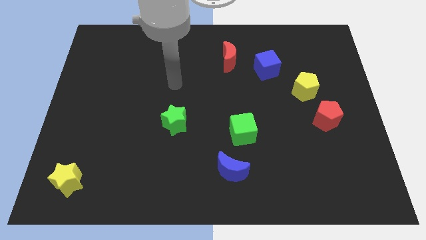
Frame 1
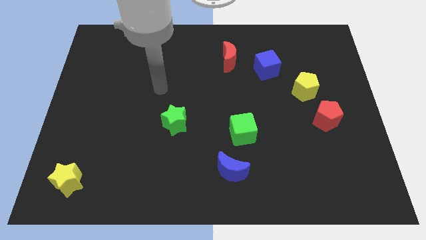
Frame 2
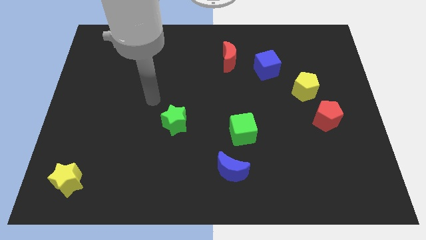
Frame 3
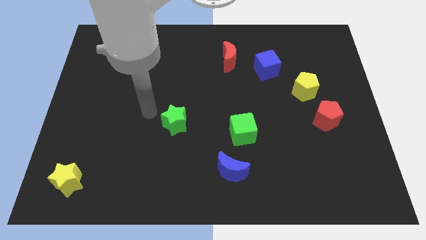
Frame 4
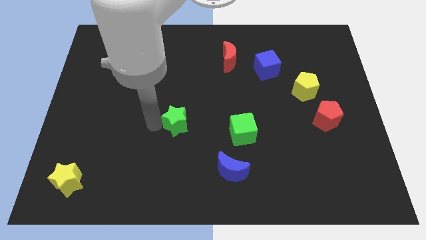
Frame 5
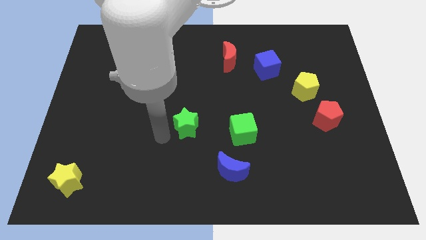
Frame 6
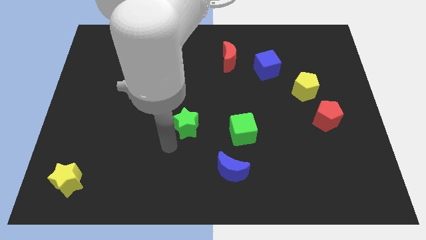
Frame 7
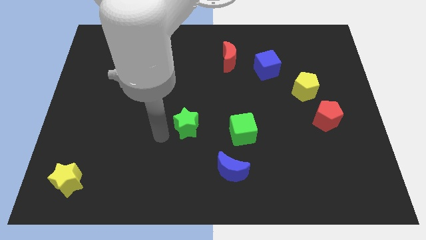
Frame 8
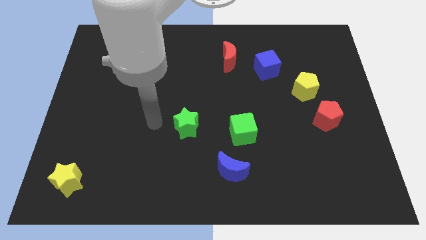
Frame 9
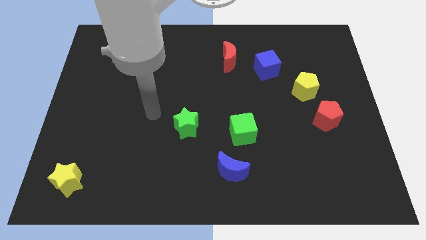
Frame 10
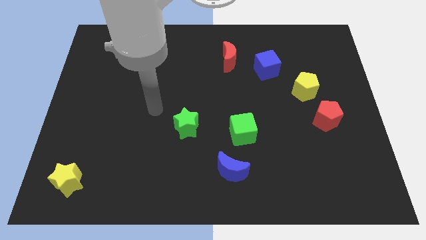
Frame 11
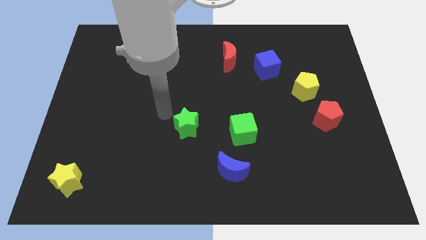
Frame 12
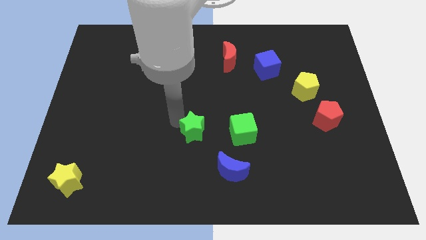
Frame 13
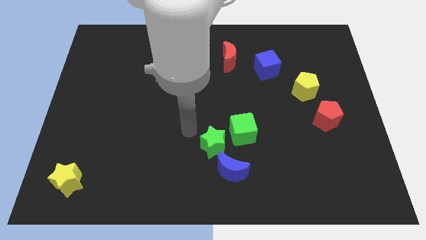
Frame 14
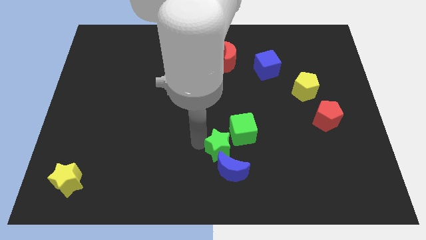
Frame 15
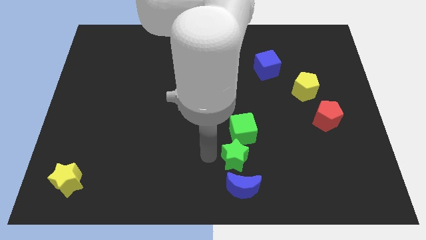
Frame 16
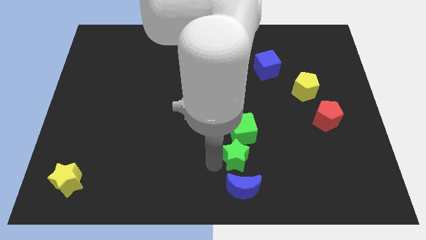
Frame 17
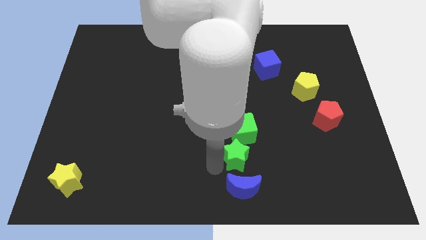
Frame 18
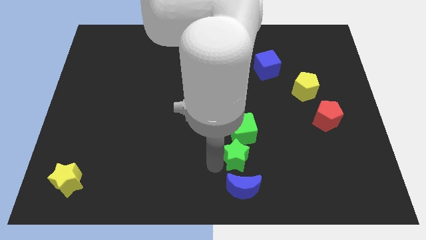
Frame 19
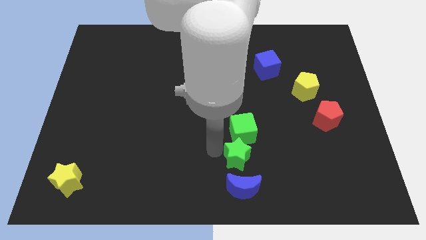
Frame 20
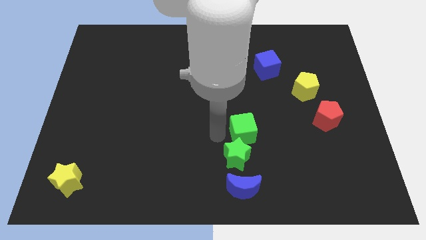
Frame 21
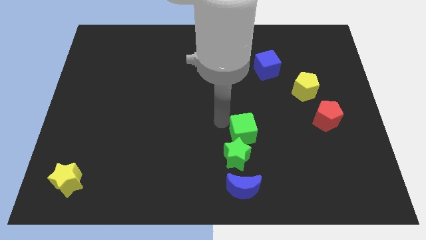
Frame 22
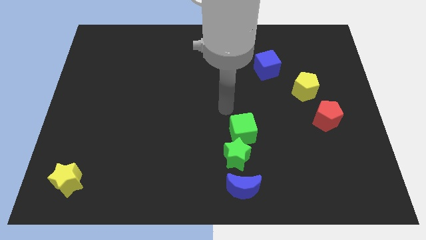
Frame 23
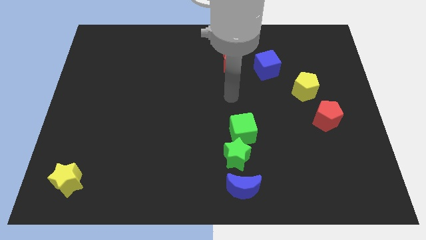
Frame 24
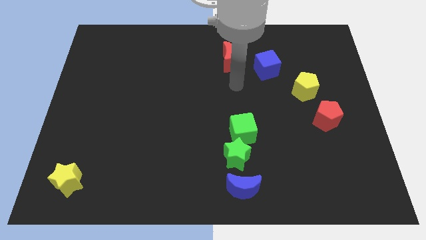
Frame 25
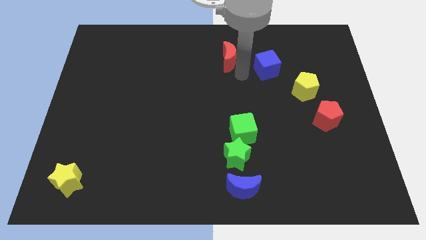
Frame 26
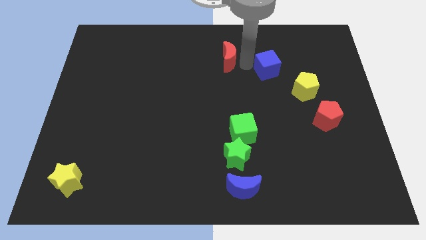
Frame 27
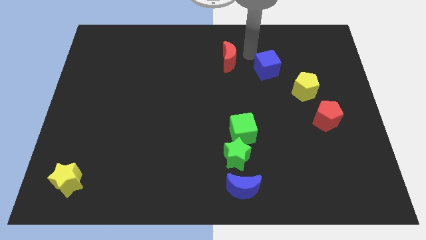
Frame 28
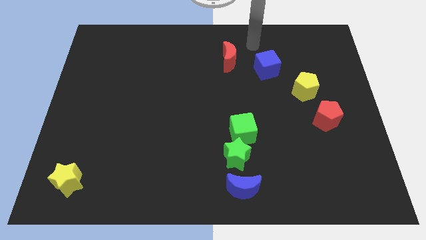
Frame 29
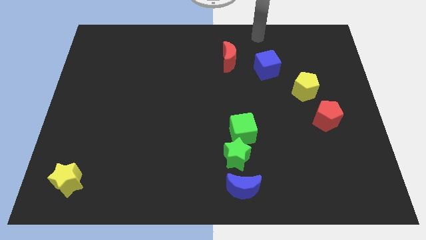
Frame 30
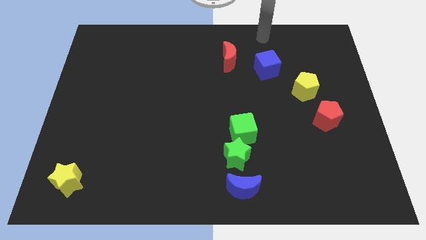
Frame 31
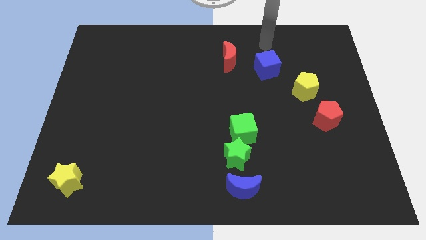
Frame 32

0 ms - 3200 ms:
put green star to the bottom left side of the green cube

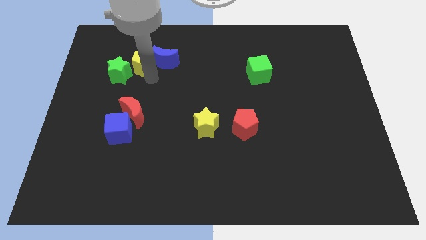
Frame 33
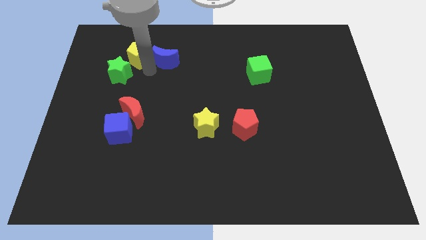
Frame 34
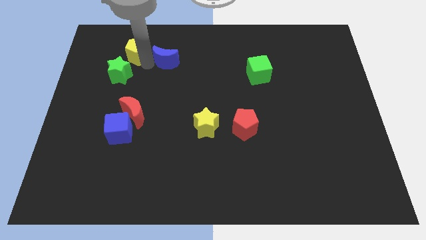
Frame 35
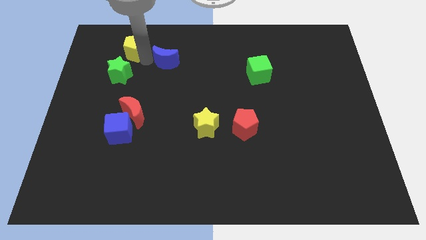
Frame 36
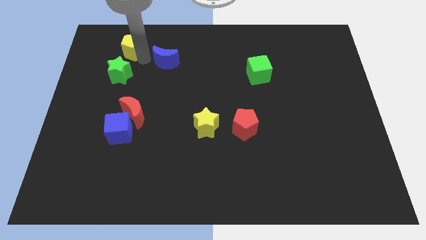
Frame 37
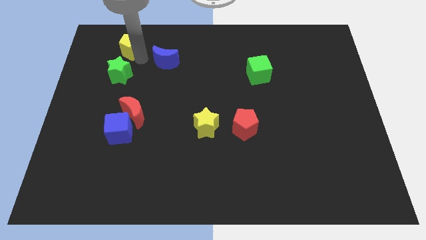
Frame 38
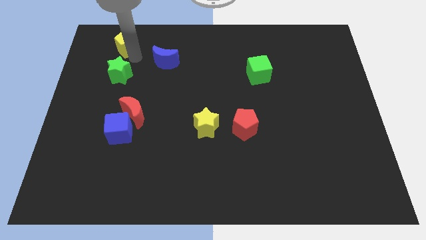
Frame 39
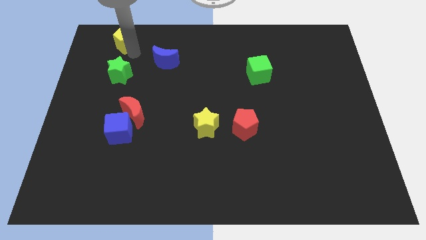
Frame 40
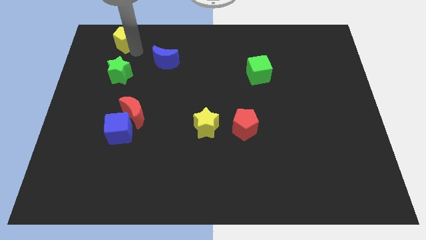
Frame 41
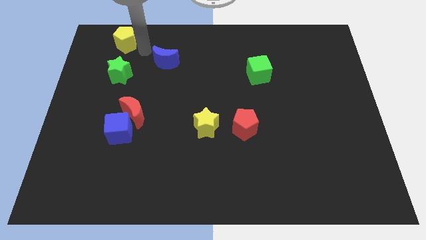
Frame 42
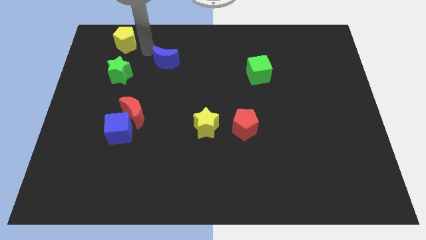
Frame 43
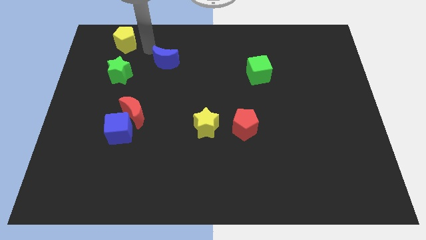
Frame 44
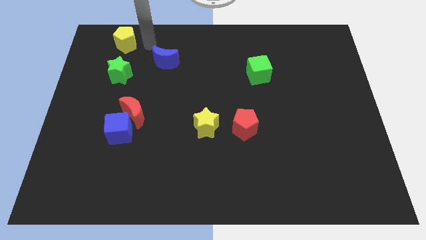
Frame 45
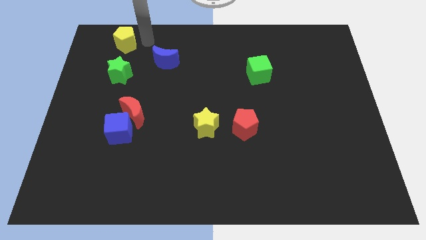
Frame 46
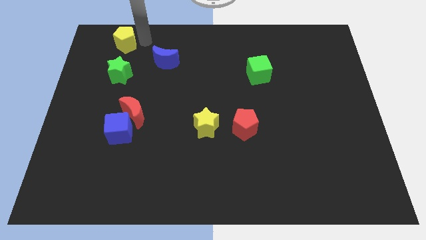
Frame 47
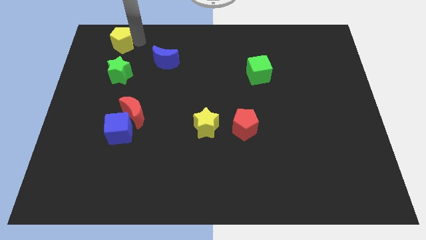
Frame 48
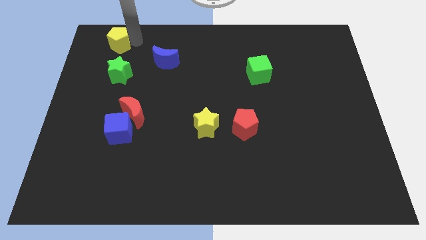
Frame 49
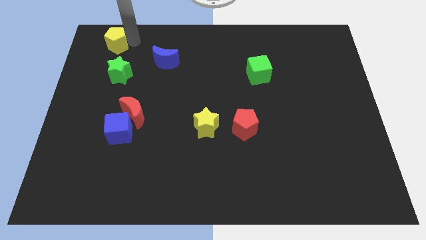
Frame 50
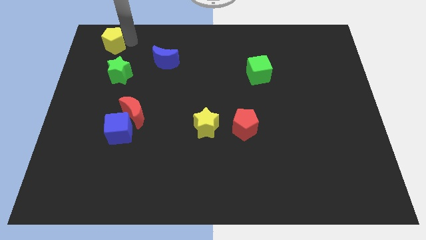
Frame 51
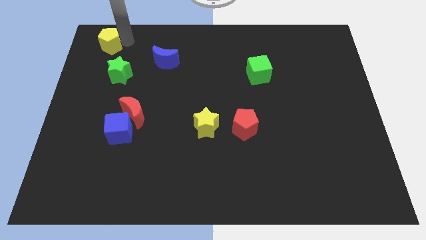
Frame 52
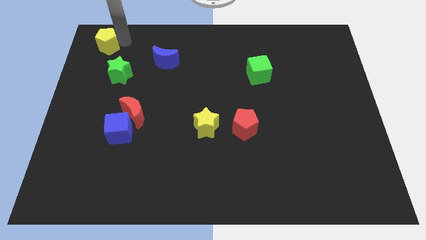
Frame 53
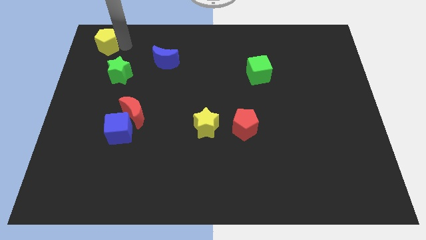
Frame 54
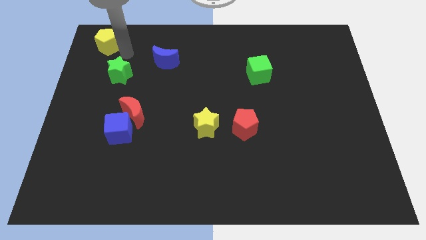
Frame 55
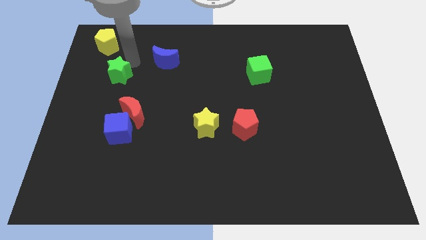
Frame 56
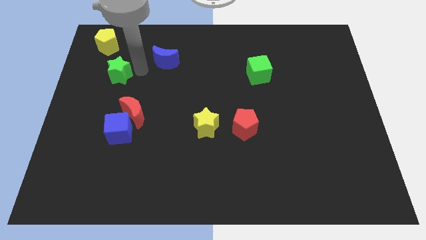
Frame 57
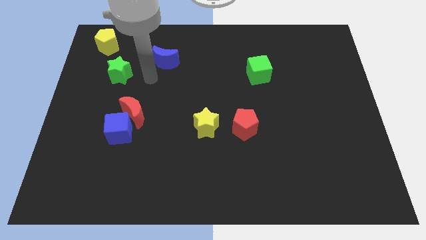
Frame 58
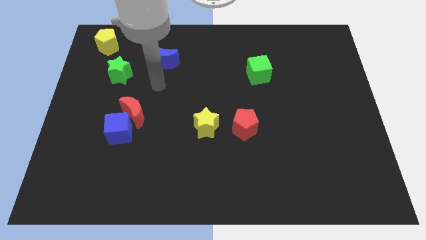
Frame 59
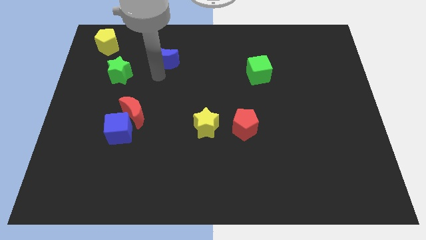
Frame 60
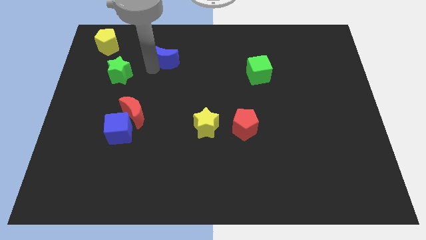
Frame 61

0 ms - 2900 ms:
push the yellow pentagon diagonally top left of the green star

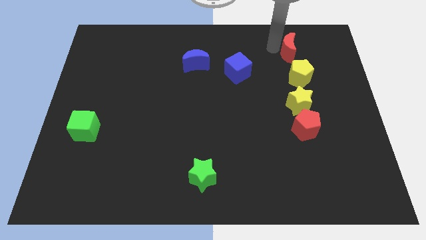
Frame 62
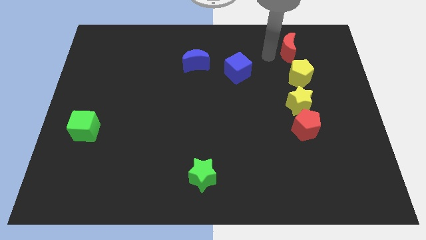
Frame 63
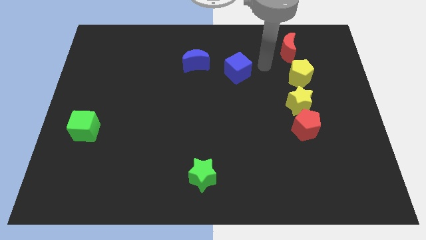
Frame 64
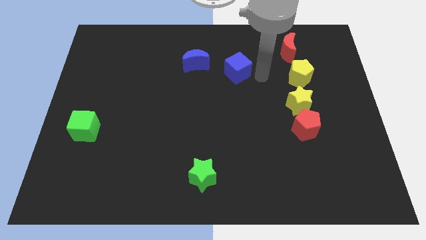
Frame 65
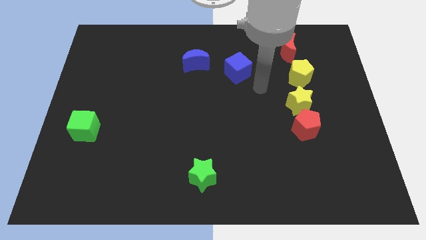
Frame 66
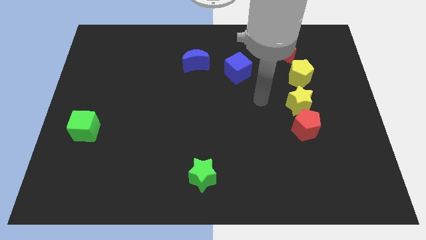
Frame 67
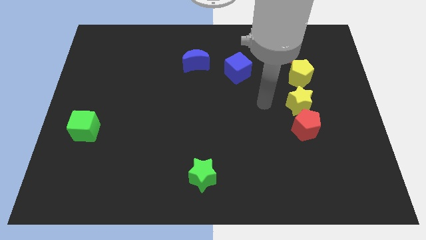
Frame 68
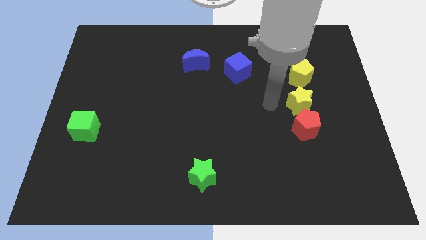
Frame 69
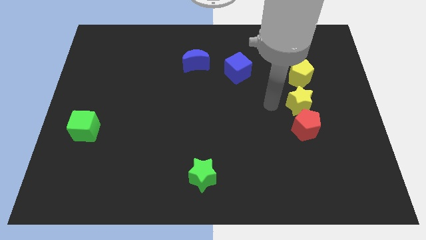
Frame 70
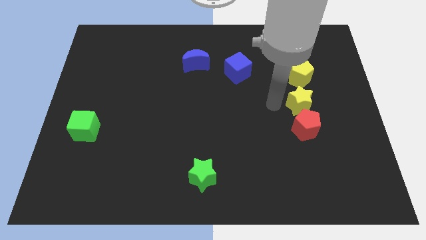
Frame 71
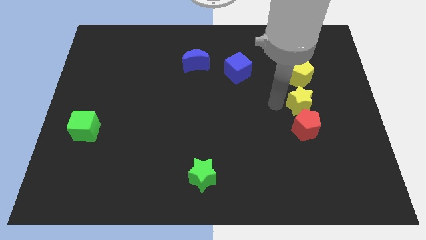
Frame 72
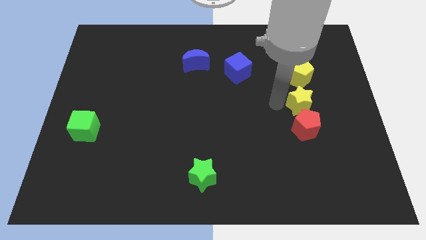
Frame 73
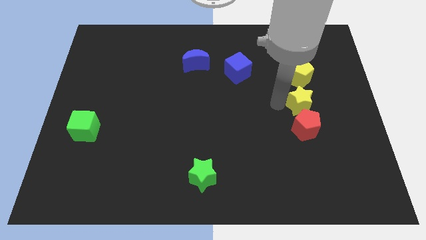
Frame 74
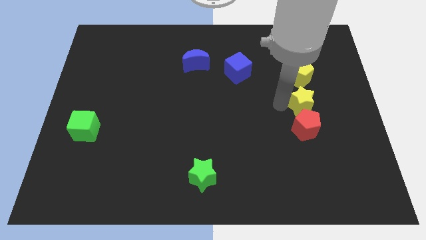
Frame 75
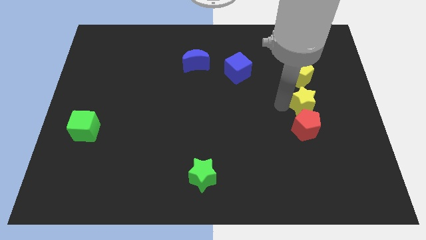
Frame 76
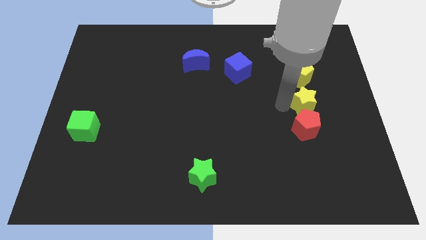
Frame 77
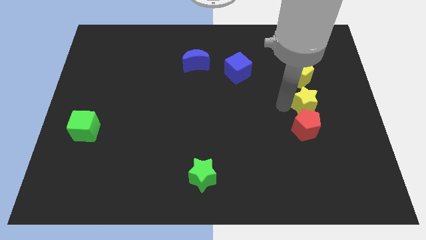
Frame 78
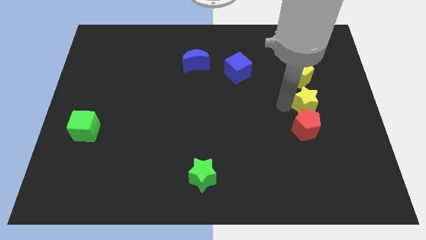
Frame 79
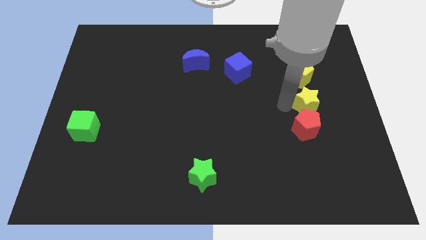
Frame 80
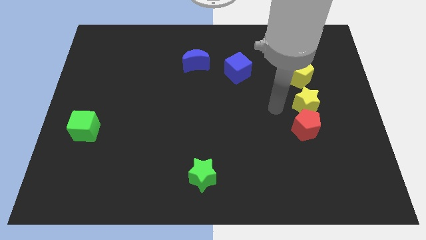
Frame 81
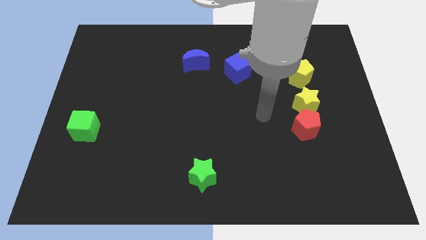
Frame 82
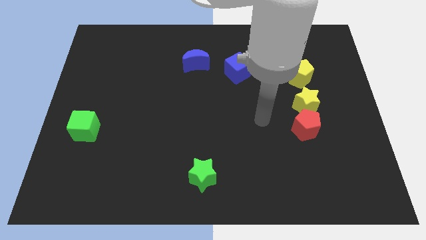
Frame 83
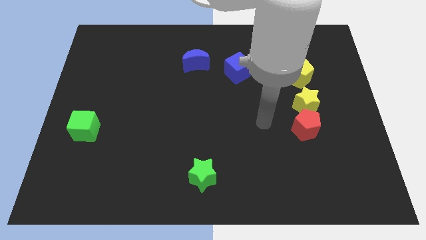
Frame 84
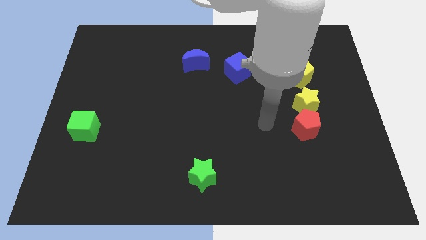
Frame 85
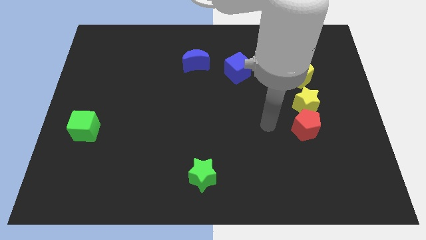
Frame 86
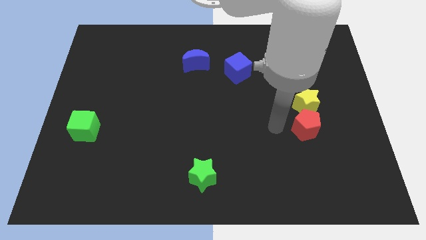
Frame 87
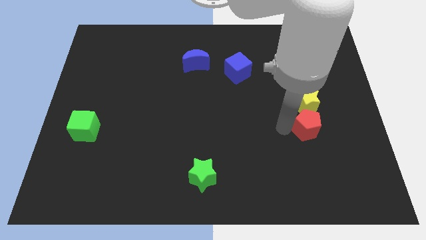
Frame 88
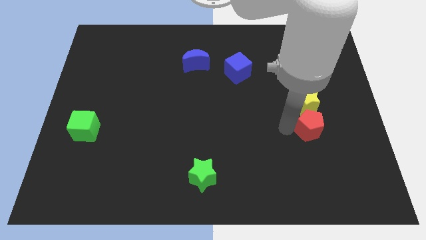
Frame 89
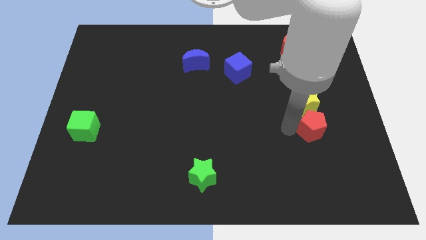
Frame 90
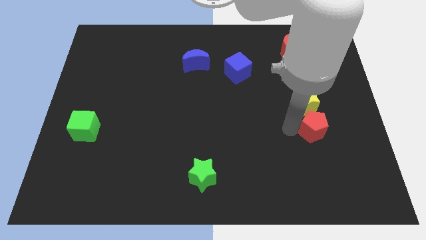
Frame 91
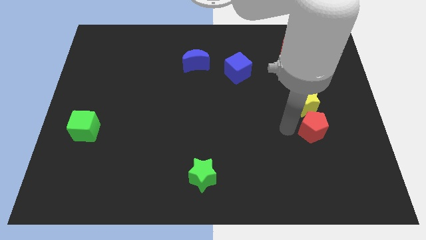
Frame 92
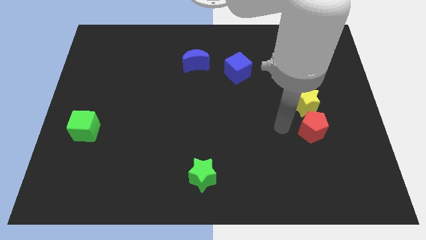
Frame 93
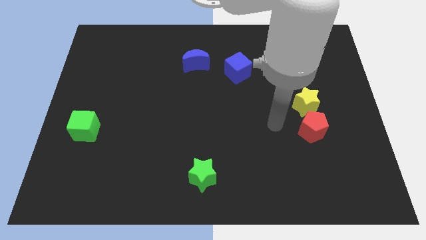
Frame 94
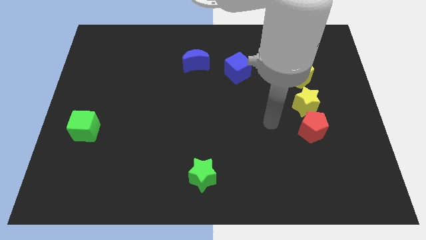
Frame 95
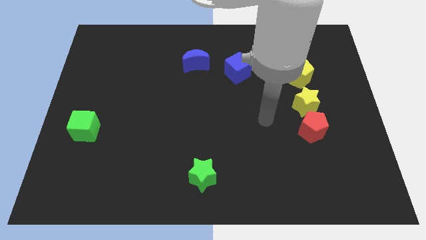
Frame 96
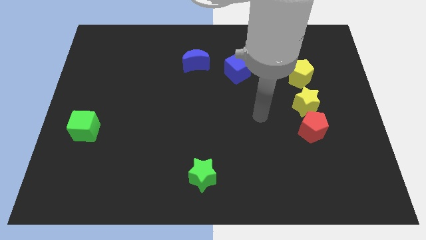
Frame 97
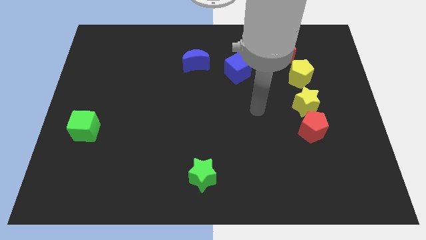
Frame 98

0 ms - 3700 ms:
adjust red blocks and yellow star in a vertical line
